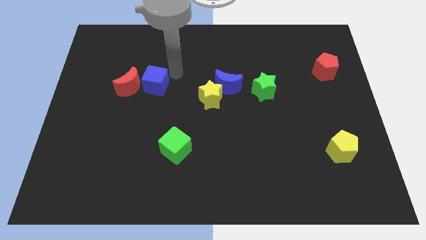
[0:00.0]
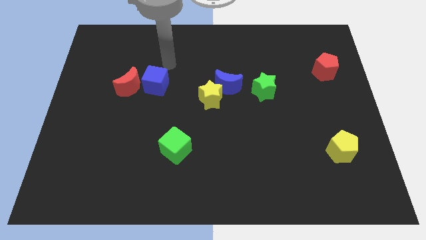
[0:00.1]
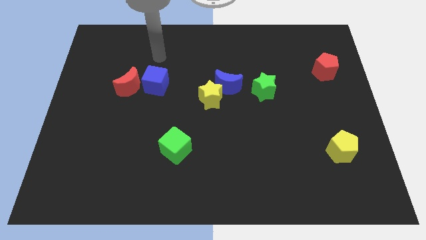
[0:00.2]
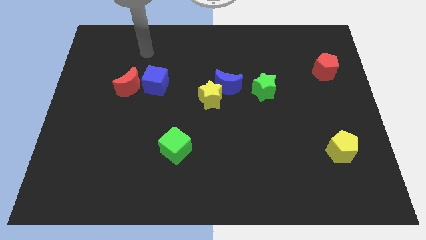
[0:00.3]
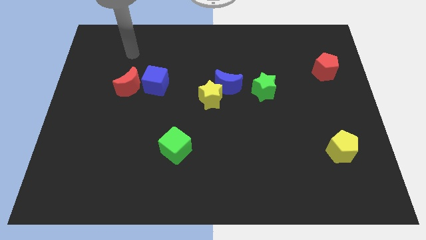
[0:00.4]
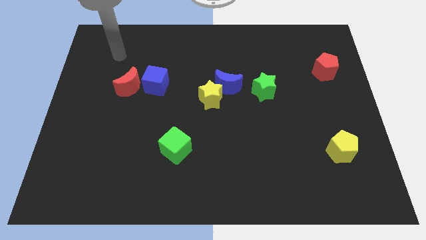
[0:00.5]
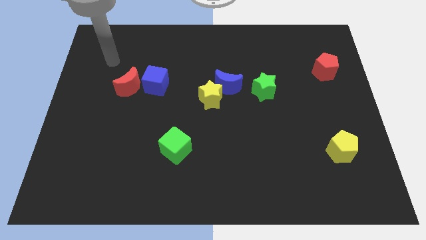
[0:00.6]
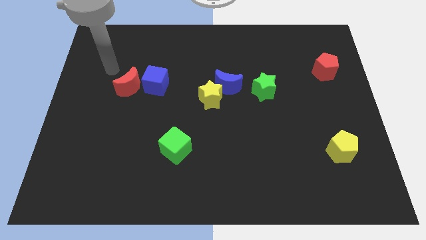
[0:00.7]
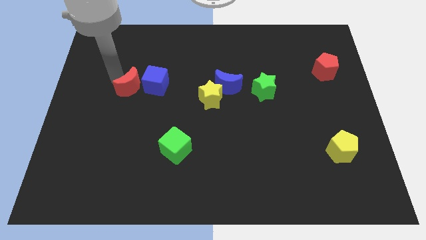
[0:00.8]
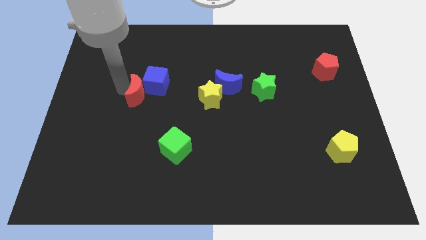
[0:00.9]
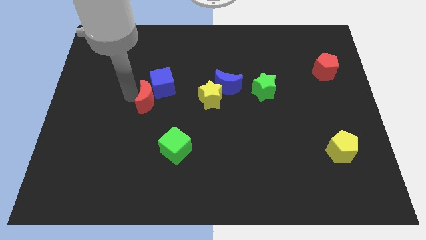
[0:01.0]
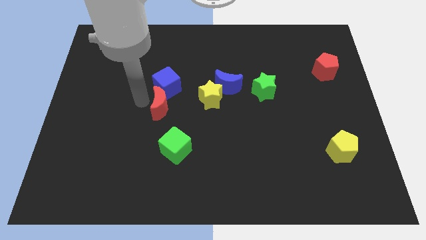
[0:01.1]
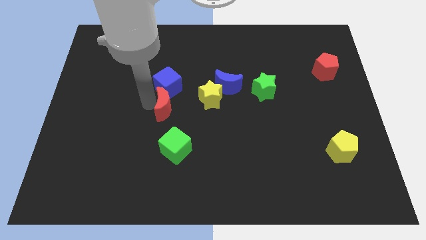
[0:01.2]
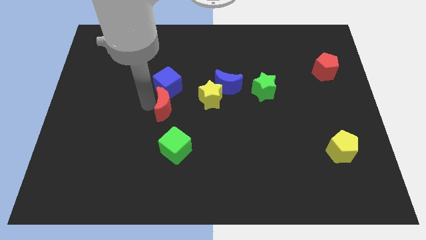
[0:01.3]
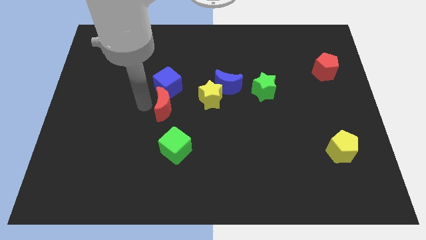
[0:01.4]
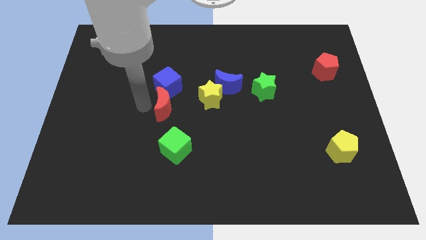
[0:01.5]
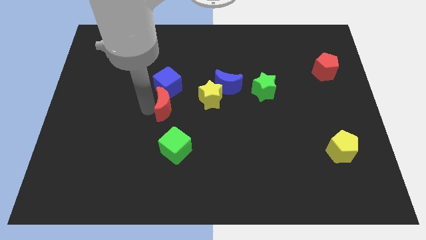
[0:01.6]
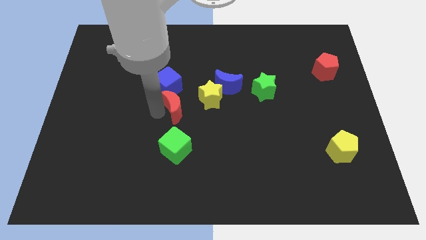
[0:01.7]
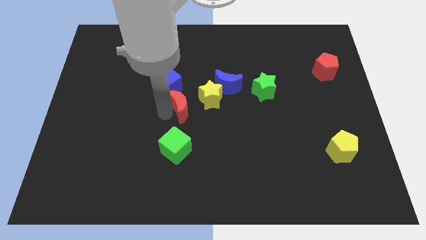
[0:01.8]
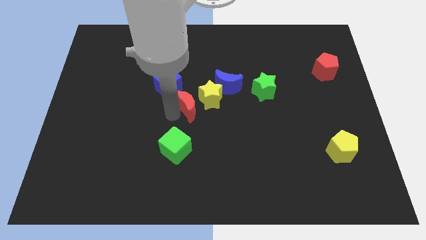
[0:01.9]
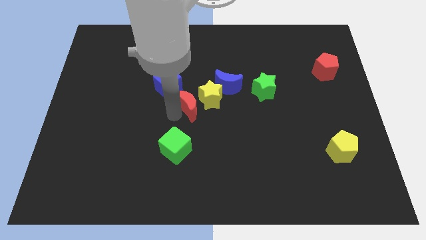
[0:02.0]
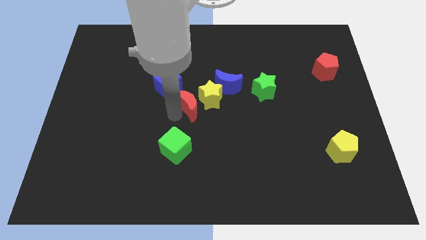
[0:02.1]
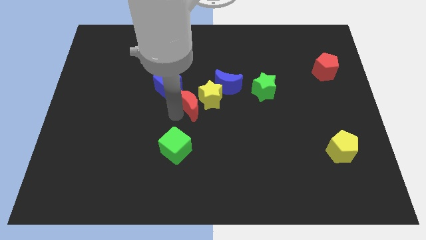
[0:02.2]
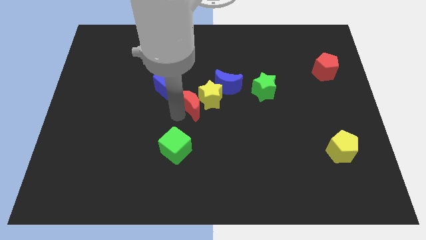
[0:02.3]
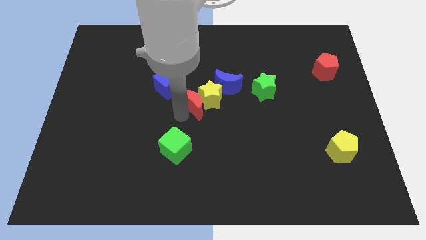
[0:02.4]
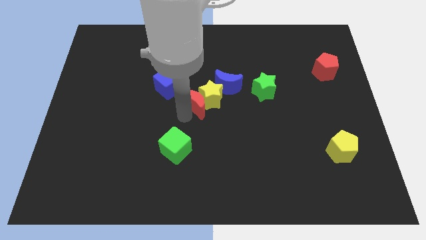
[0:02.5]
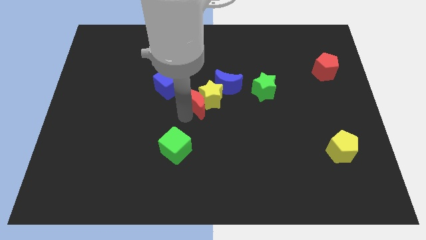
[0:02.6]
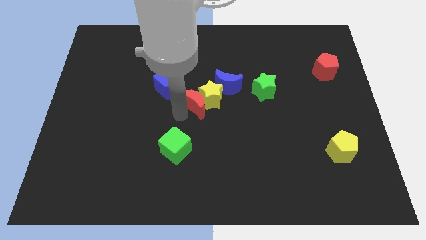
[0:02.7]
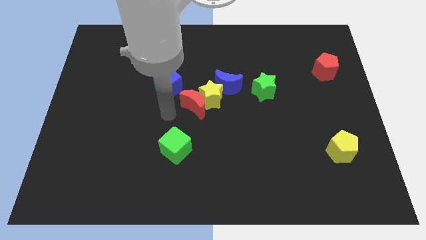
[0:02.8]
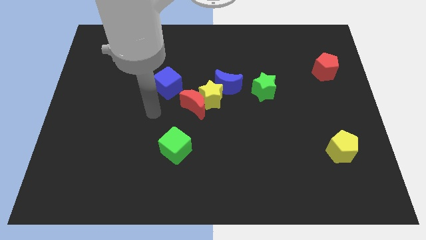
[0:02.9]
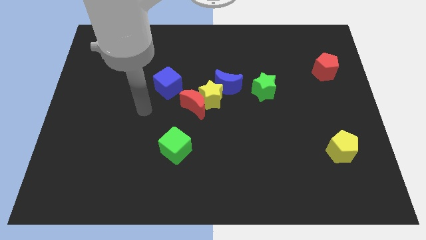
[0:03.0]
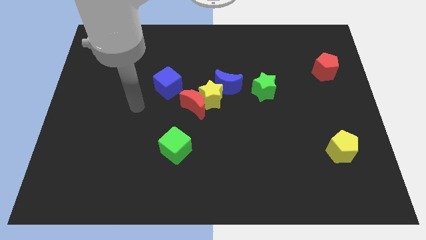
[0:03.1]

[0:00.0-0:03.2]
slide the red crescent into the yellow star

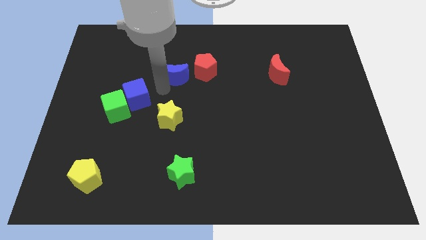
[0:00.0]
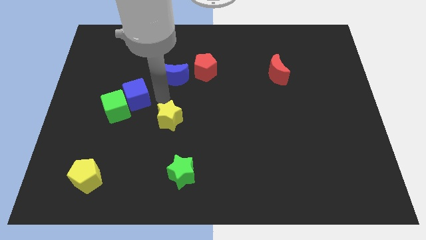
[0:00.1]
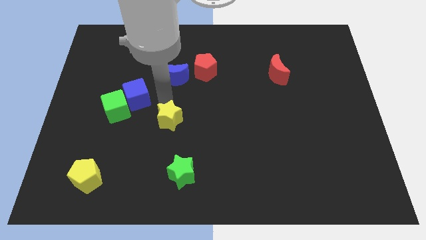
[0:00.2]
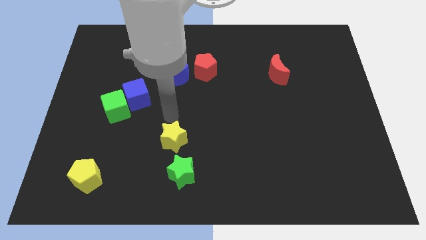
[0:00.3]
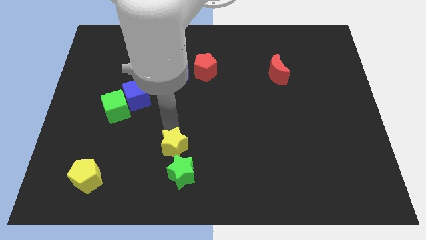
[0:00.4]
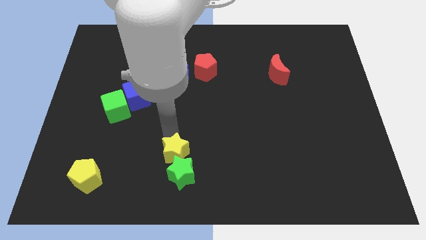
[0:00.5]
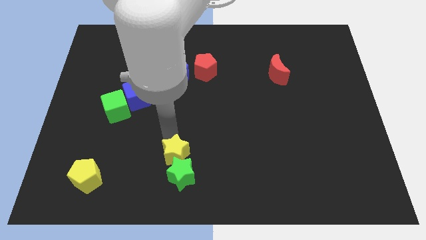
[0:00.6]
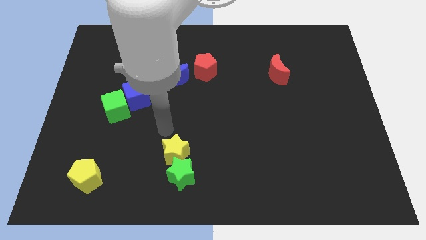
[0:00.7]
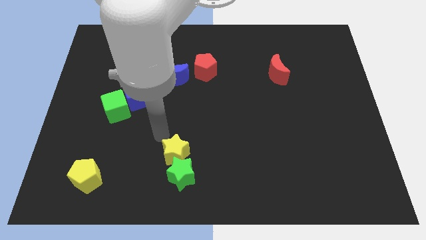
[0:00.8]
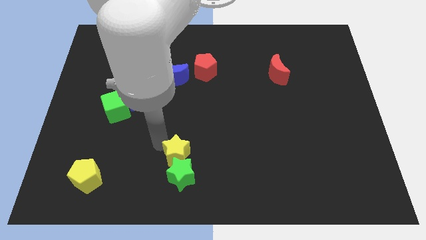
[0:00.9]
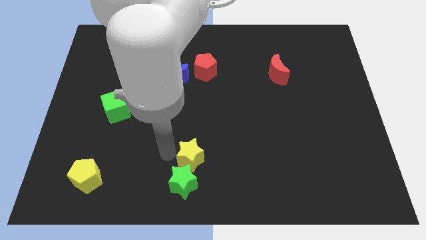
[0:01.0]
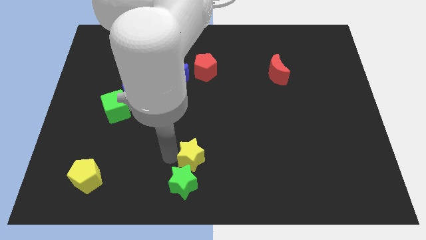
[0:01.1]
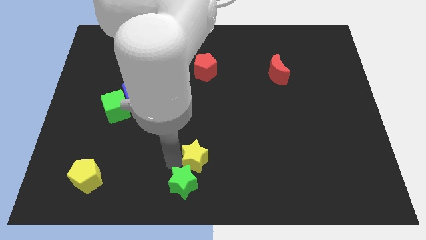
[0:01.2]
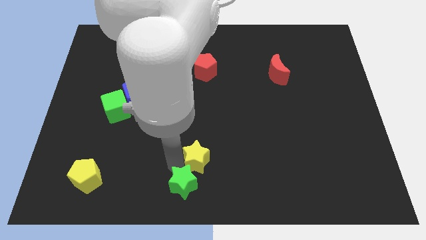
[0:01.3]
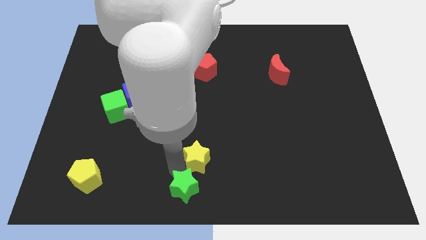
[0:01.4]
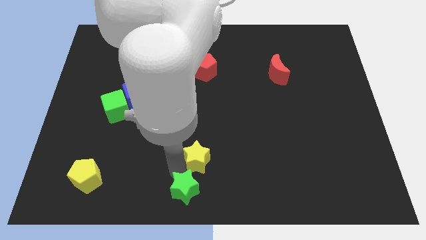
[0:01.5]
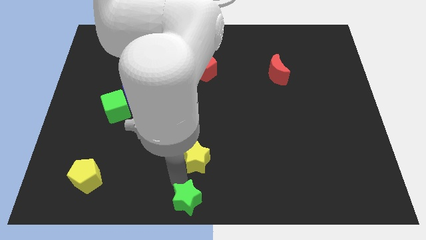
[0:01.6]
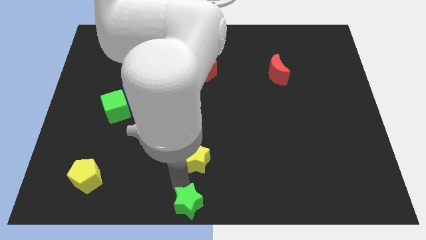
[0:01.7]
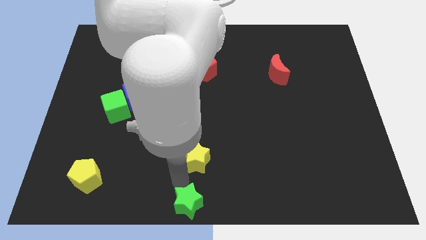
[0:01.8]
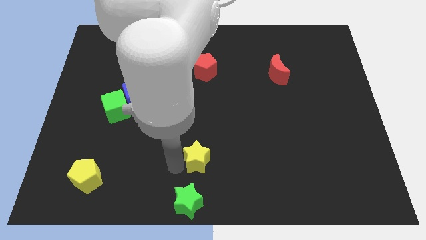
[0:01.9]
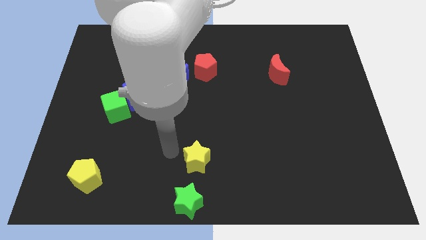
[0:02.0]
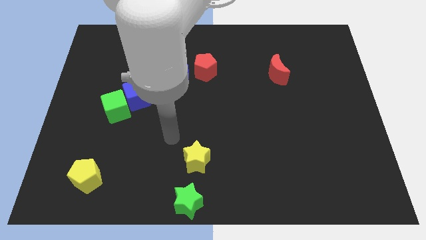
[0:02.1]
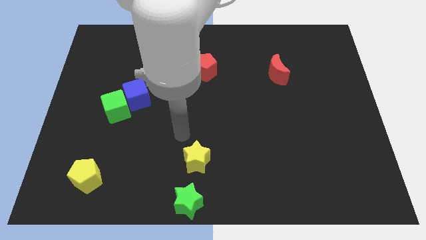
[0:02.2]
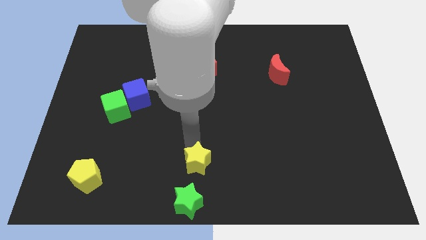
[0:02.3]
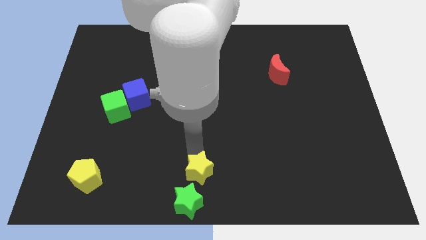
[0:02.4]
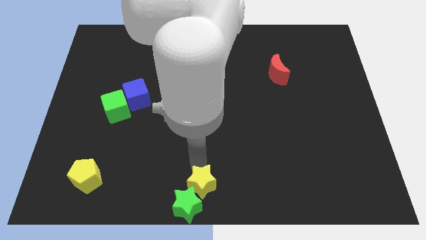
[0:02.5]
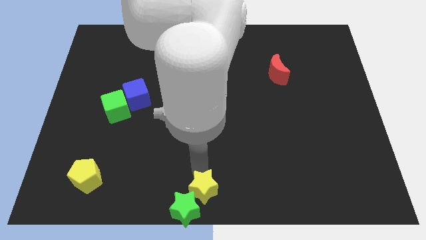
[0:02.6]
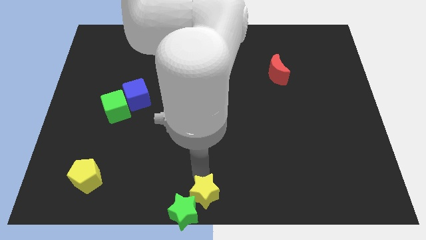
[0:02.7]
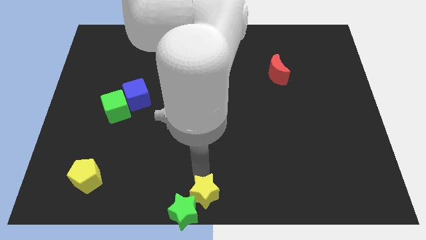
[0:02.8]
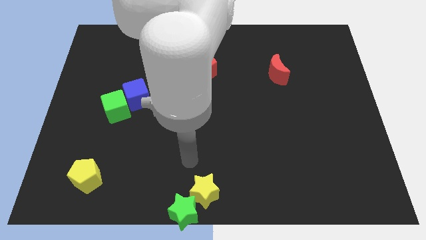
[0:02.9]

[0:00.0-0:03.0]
push the stars towards the bottom center of the board

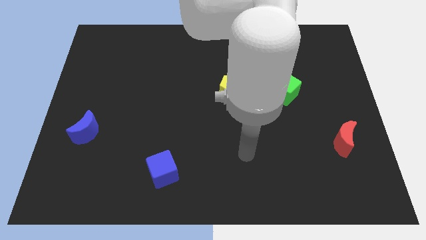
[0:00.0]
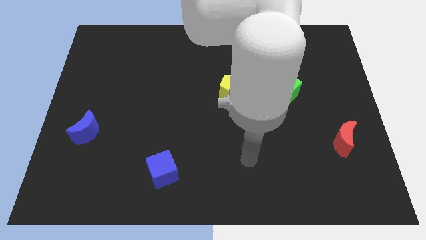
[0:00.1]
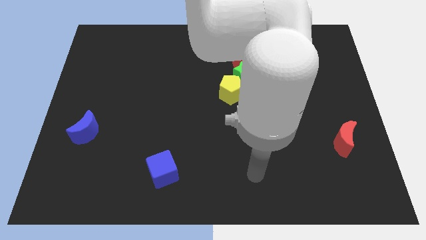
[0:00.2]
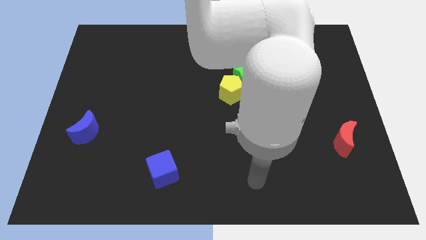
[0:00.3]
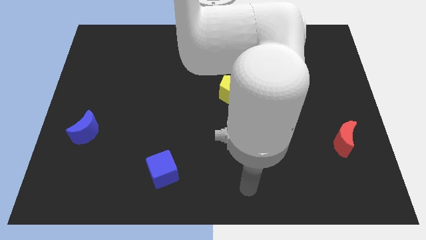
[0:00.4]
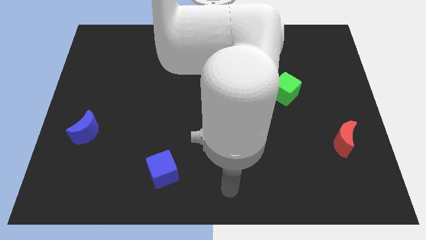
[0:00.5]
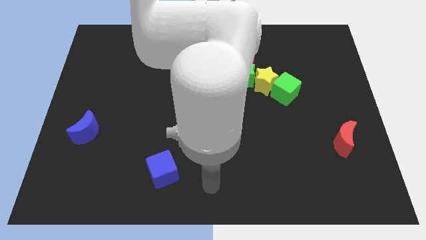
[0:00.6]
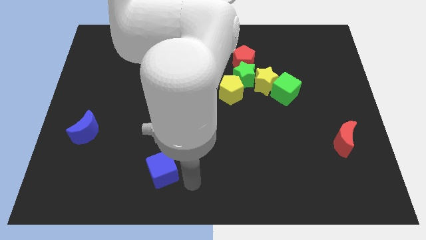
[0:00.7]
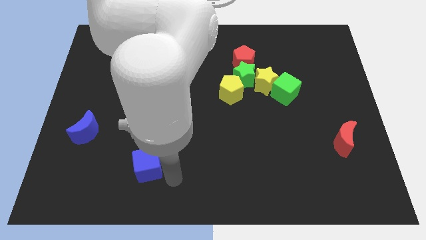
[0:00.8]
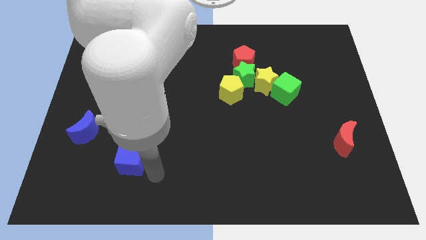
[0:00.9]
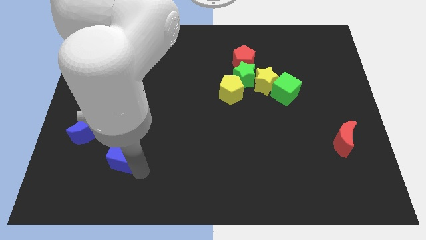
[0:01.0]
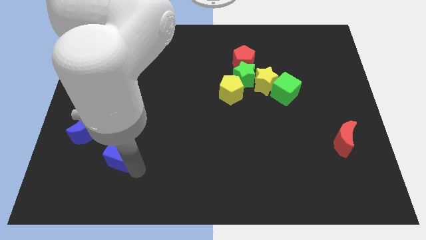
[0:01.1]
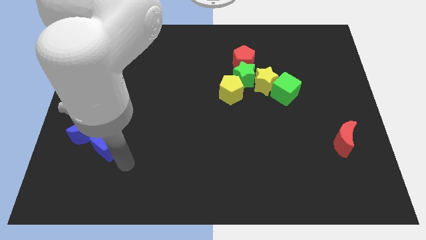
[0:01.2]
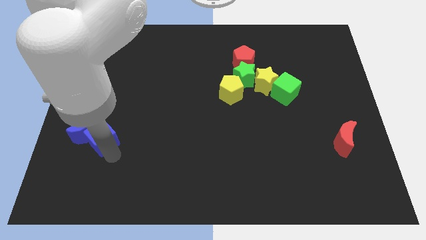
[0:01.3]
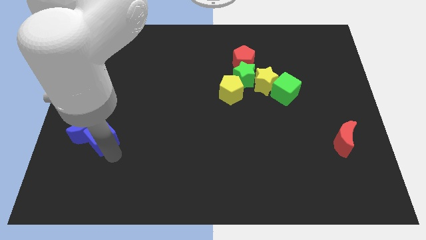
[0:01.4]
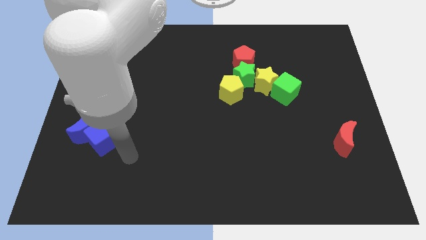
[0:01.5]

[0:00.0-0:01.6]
place the blue cube closer to the bottom of the blue cube

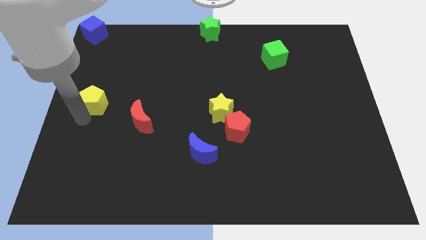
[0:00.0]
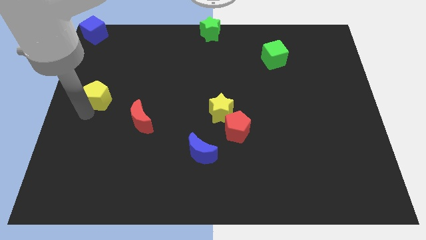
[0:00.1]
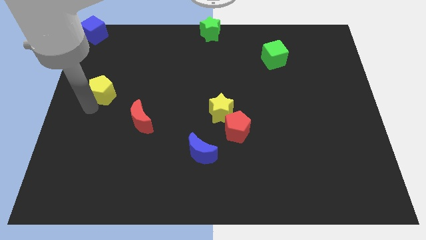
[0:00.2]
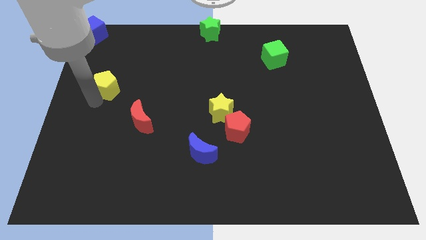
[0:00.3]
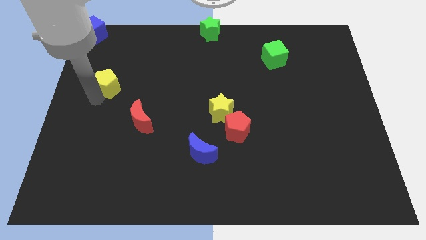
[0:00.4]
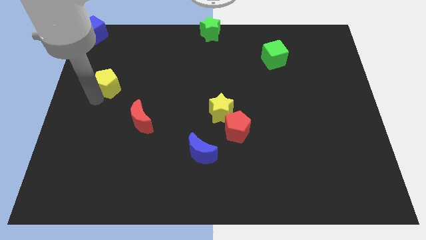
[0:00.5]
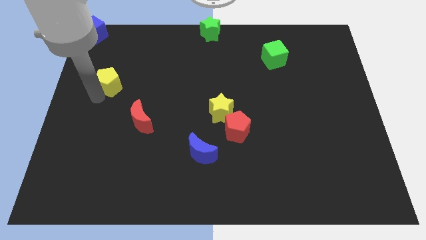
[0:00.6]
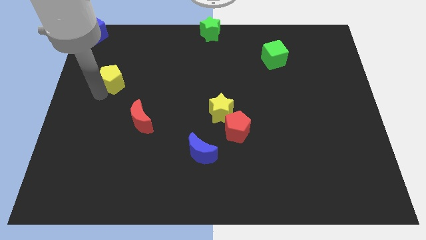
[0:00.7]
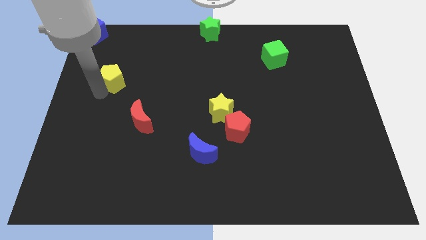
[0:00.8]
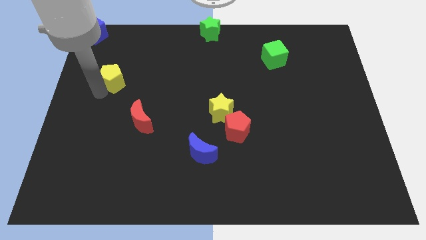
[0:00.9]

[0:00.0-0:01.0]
place the yellow pentagon diagonally towards red crescent

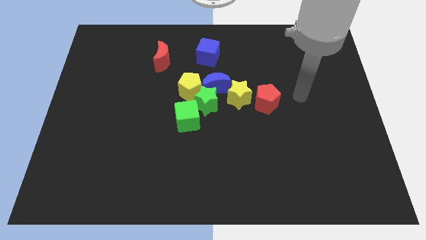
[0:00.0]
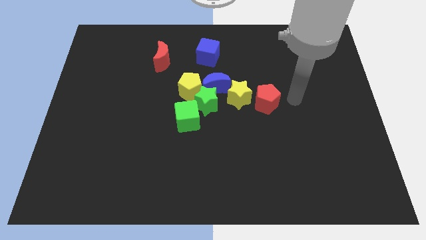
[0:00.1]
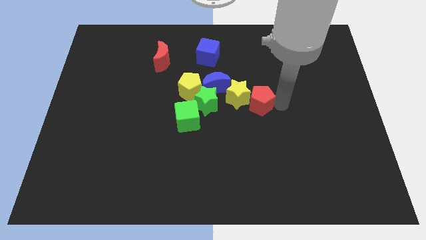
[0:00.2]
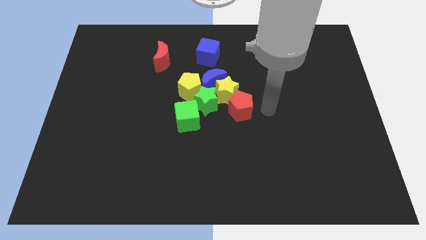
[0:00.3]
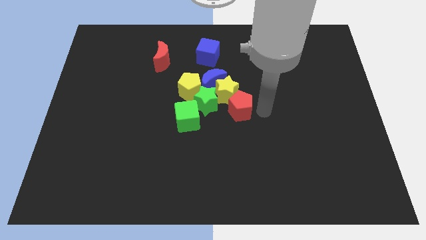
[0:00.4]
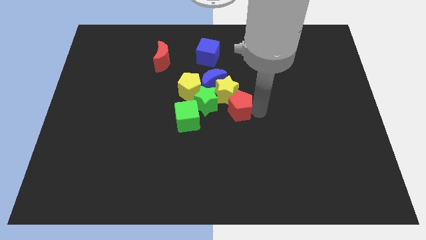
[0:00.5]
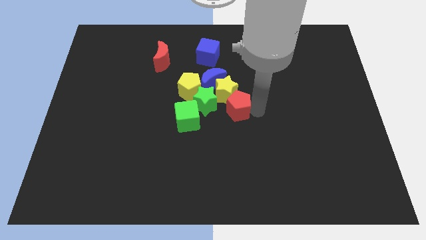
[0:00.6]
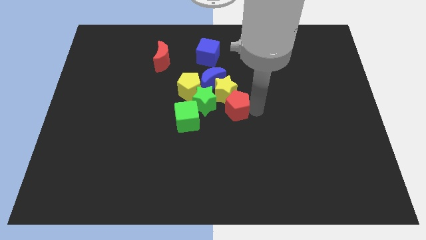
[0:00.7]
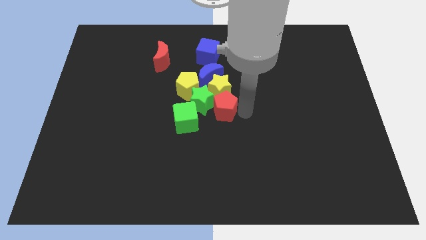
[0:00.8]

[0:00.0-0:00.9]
push the red pentagon into the group of blocks
